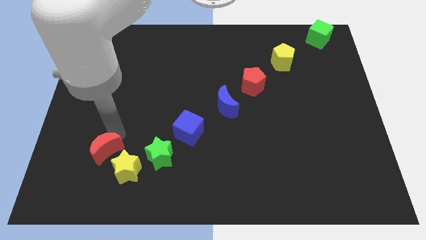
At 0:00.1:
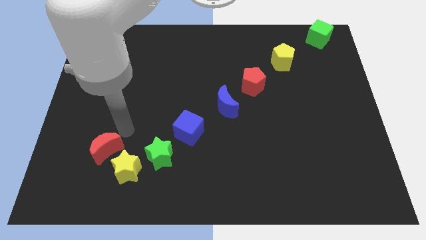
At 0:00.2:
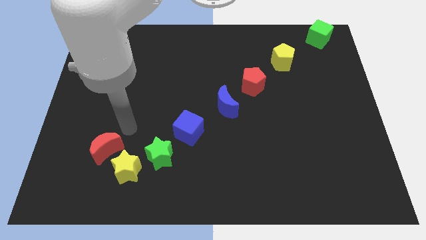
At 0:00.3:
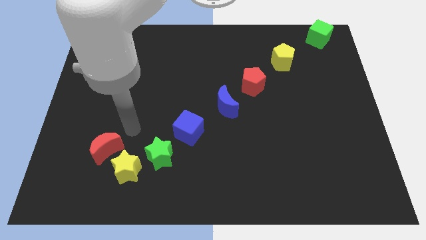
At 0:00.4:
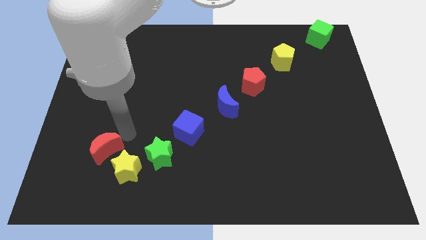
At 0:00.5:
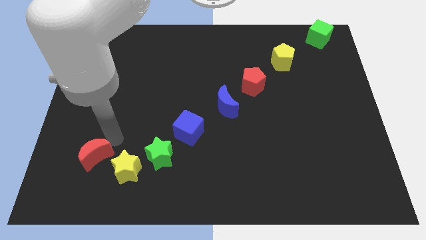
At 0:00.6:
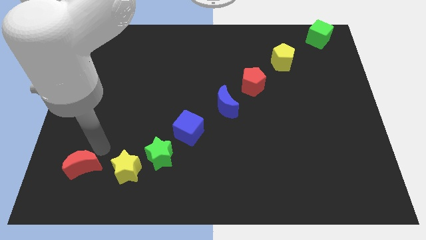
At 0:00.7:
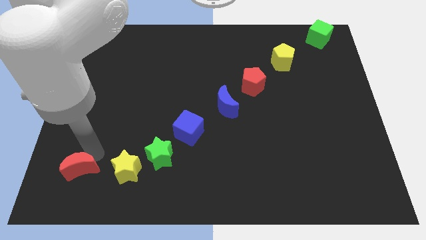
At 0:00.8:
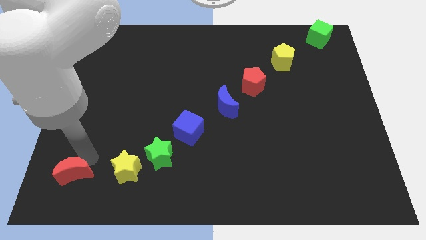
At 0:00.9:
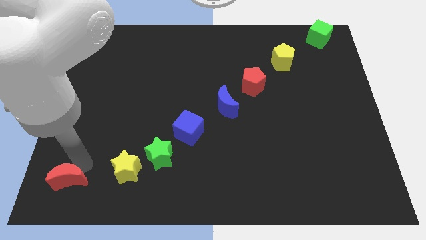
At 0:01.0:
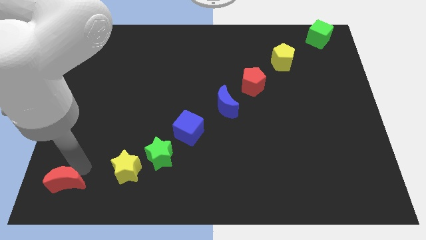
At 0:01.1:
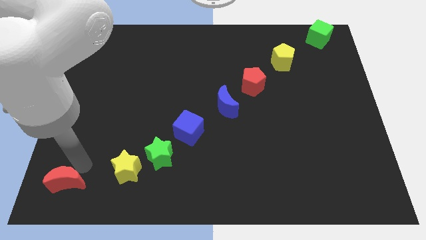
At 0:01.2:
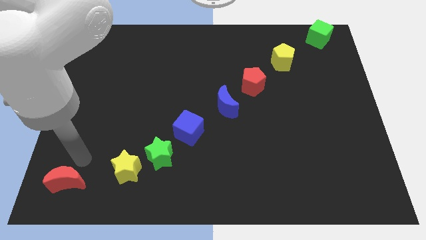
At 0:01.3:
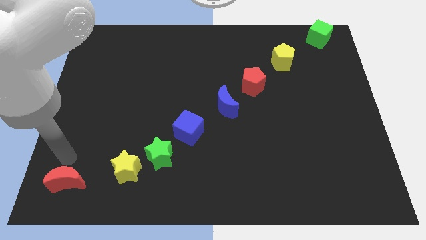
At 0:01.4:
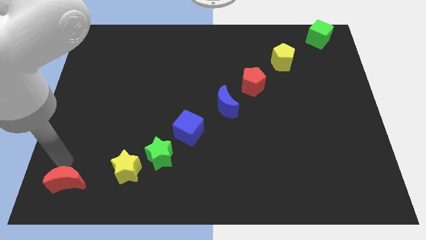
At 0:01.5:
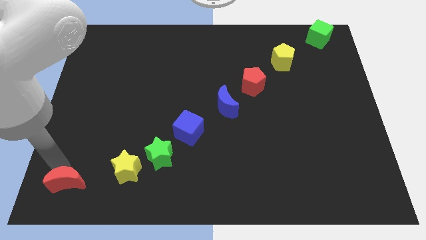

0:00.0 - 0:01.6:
push red crescent downwards

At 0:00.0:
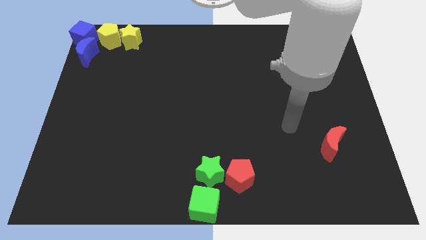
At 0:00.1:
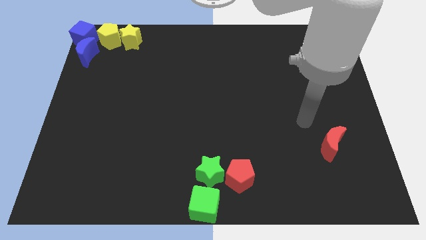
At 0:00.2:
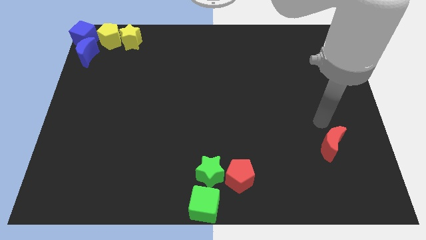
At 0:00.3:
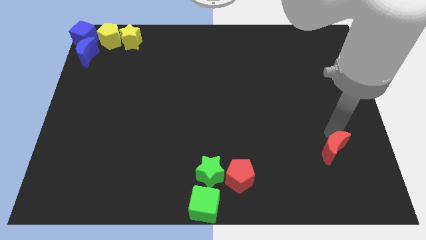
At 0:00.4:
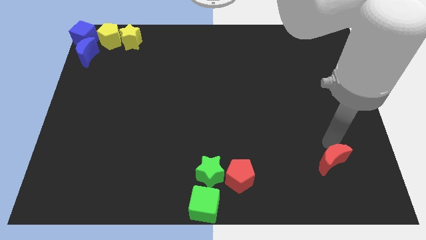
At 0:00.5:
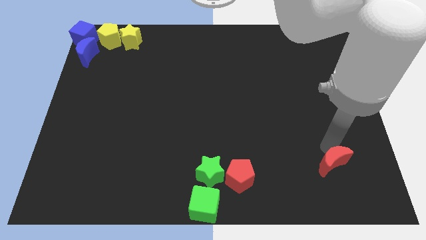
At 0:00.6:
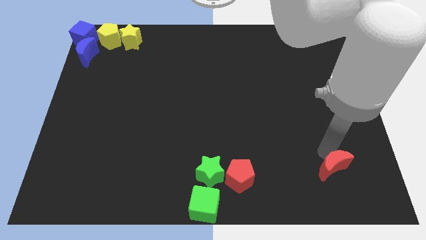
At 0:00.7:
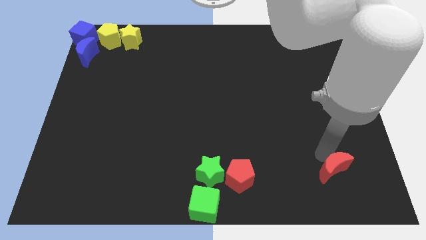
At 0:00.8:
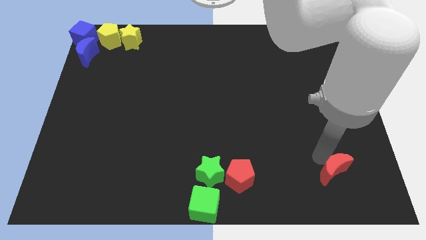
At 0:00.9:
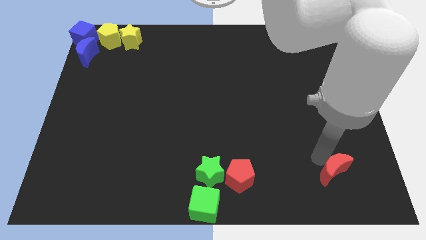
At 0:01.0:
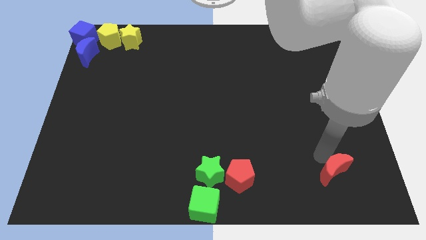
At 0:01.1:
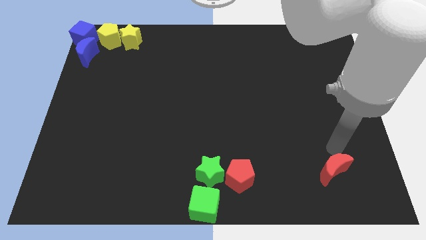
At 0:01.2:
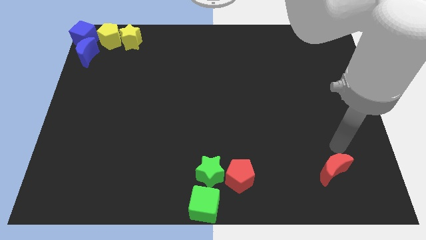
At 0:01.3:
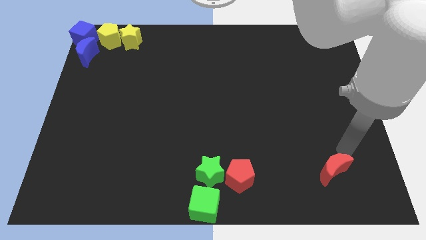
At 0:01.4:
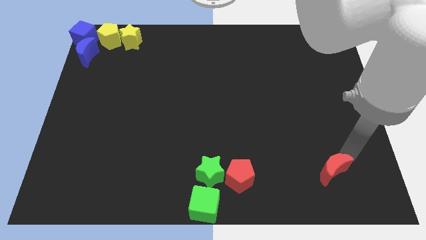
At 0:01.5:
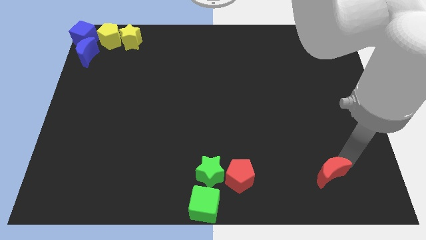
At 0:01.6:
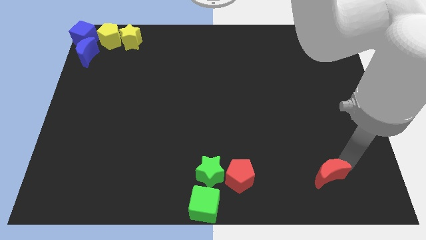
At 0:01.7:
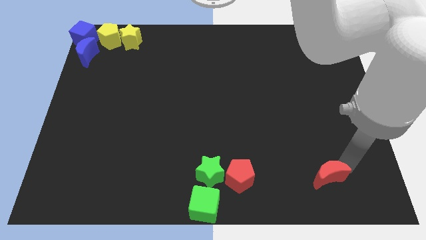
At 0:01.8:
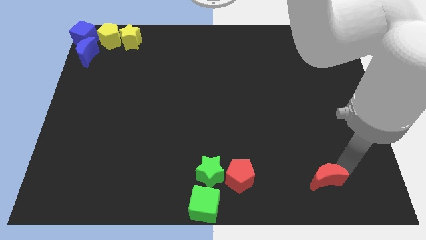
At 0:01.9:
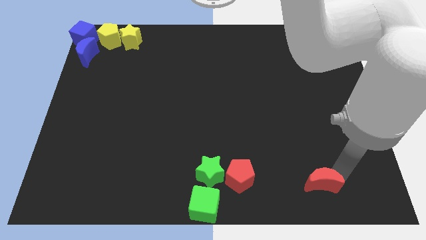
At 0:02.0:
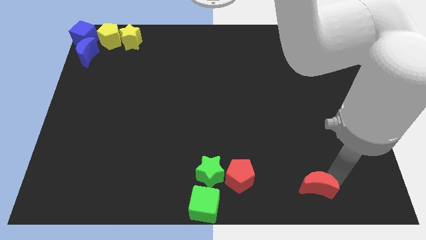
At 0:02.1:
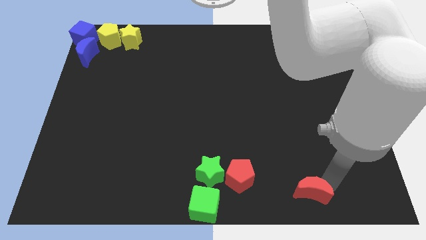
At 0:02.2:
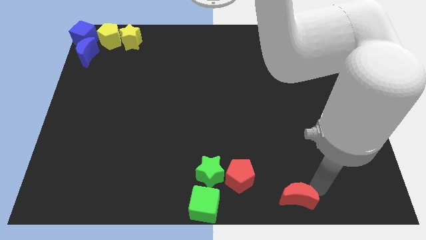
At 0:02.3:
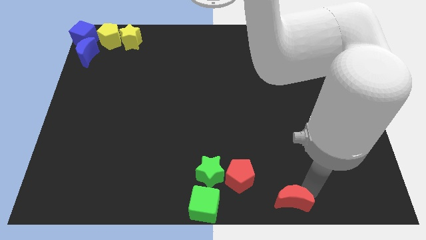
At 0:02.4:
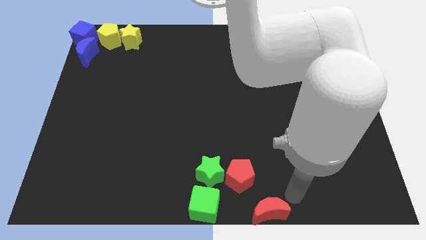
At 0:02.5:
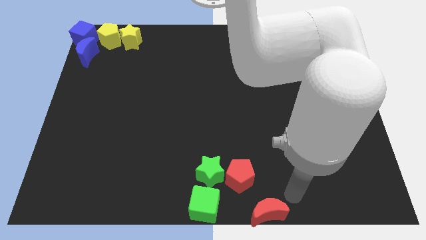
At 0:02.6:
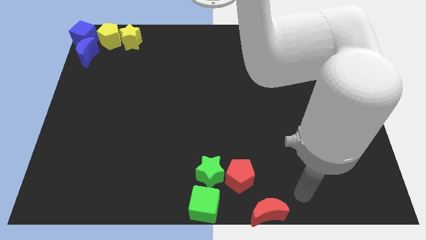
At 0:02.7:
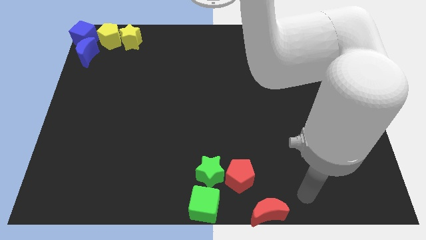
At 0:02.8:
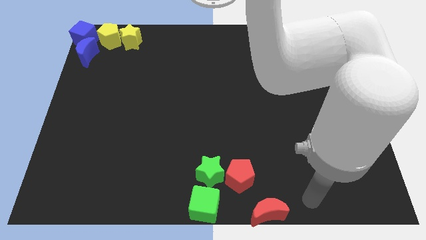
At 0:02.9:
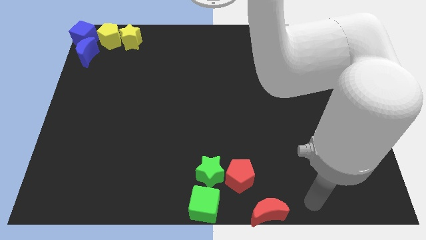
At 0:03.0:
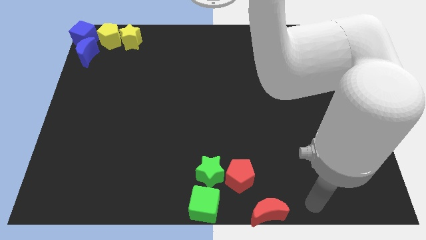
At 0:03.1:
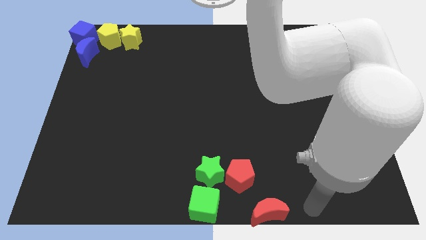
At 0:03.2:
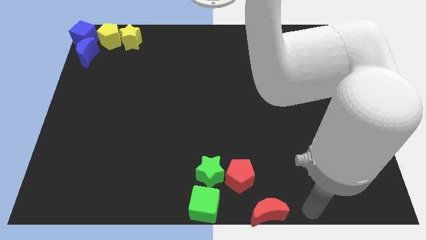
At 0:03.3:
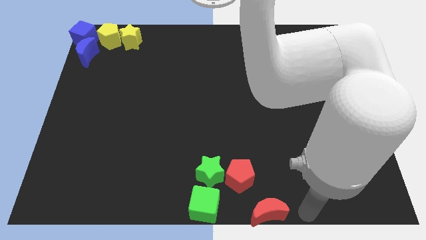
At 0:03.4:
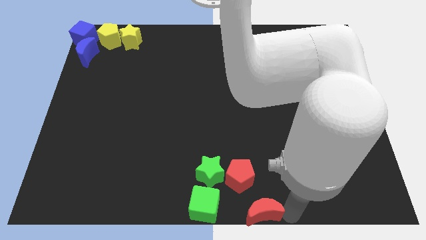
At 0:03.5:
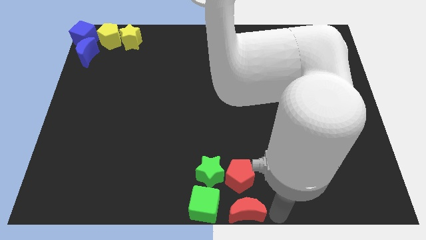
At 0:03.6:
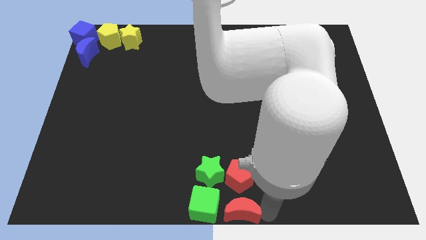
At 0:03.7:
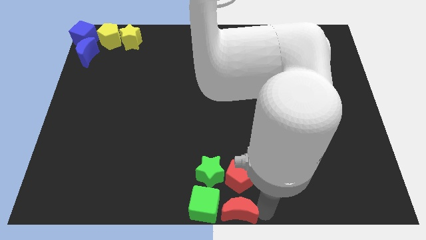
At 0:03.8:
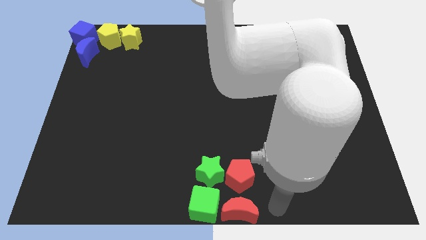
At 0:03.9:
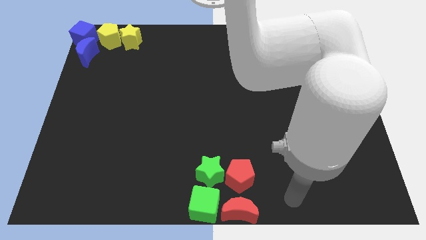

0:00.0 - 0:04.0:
place the red moon below the red pentagon

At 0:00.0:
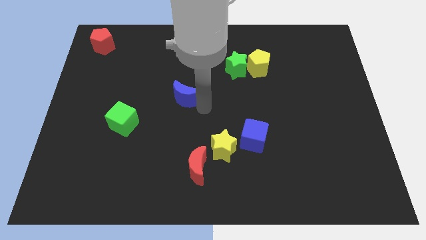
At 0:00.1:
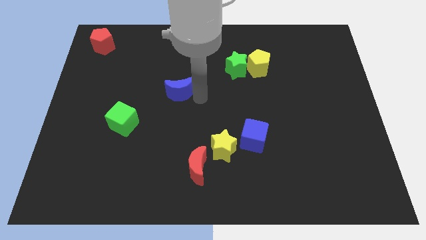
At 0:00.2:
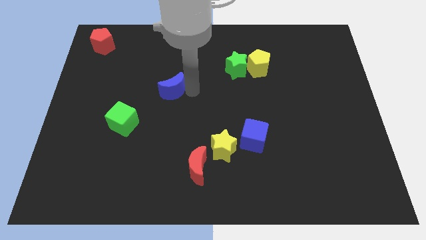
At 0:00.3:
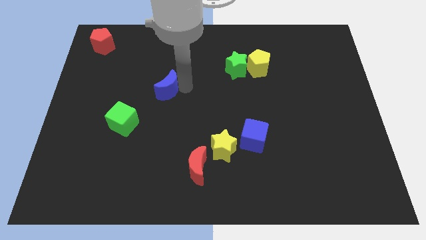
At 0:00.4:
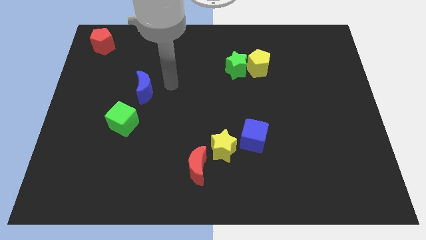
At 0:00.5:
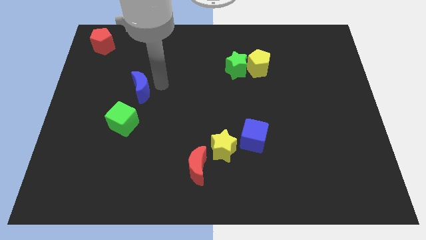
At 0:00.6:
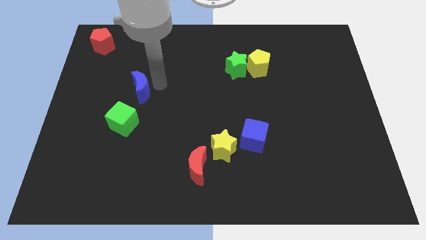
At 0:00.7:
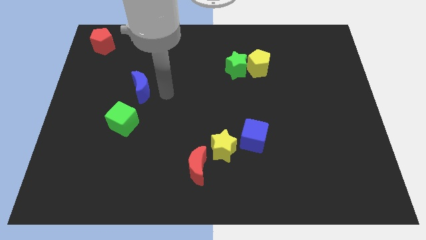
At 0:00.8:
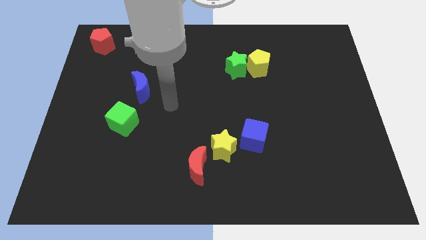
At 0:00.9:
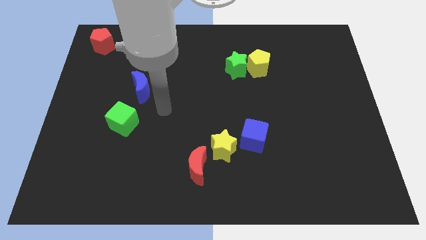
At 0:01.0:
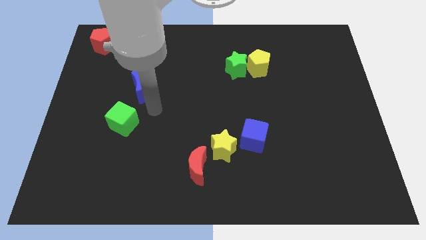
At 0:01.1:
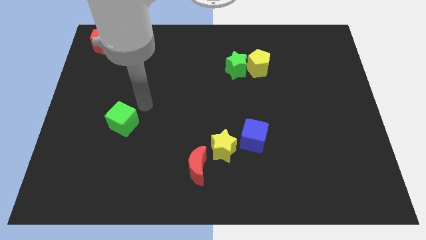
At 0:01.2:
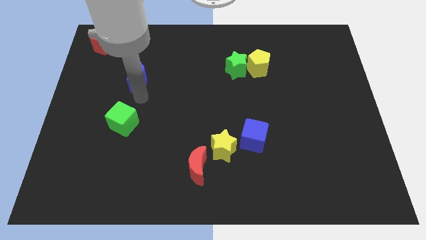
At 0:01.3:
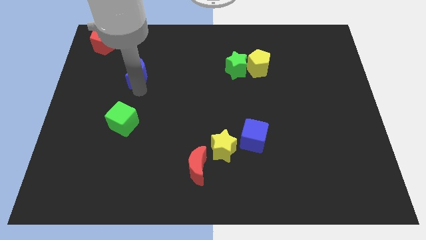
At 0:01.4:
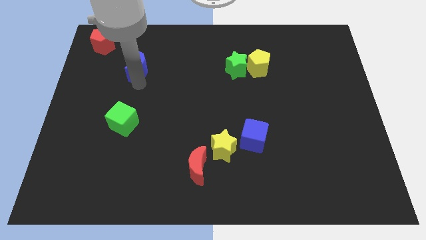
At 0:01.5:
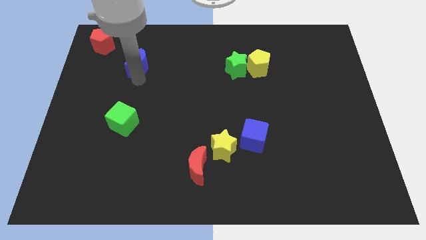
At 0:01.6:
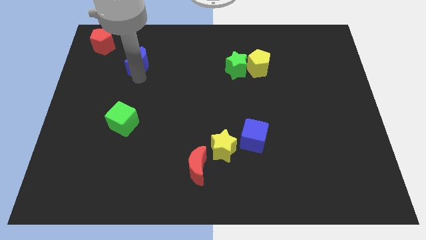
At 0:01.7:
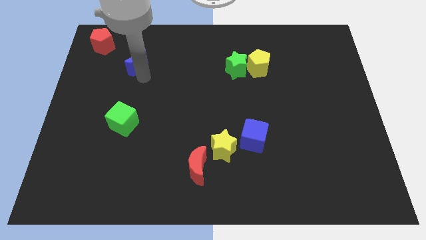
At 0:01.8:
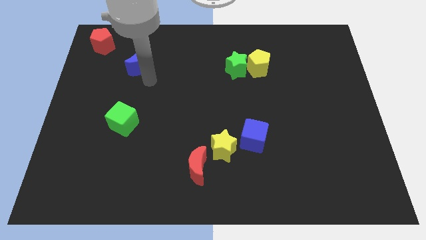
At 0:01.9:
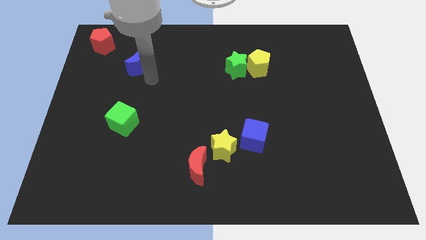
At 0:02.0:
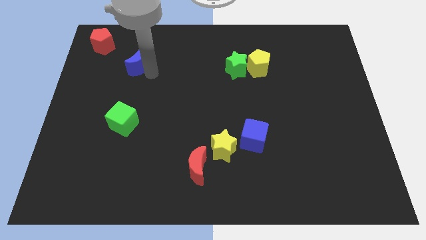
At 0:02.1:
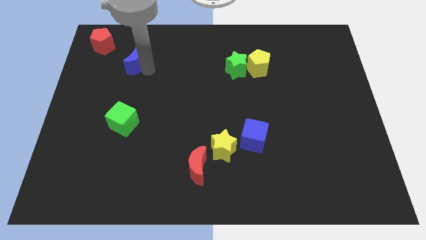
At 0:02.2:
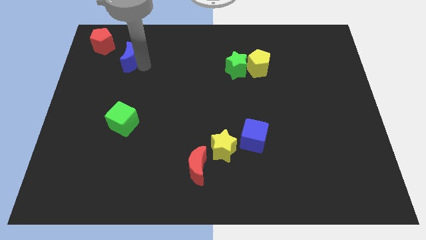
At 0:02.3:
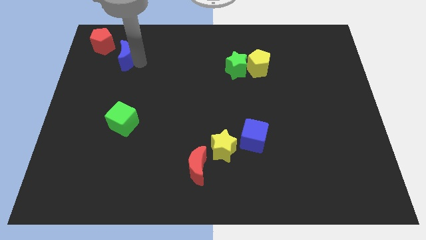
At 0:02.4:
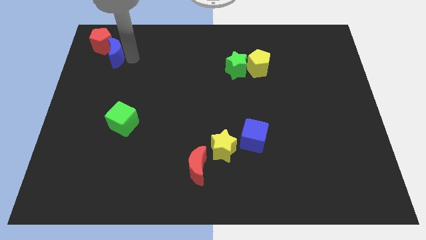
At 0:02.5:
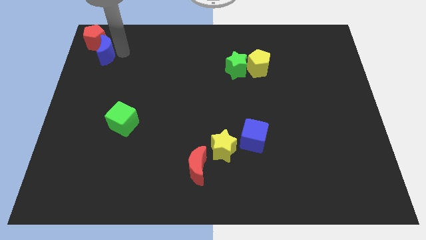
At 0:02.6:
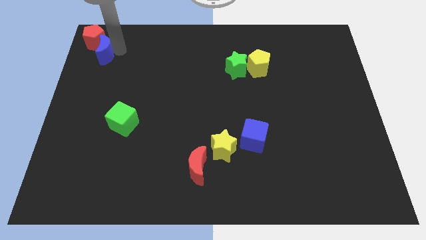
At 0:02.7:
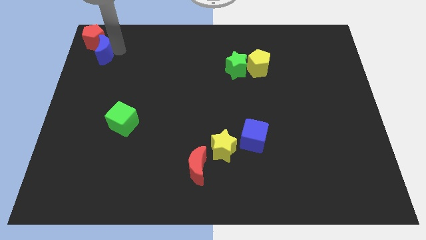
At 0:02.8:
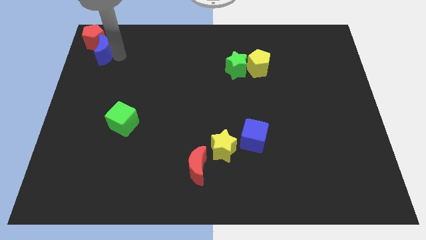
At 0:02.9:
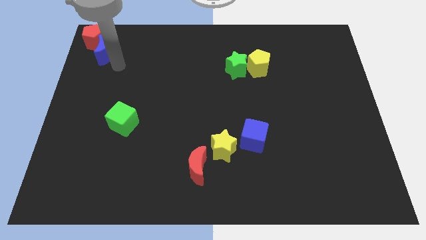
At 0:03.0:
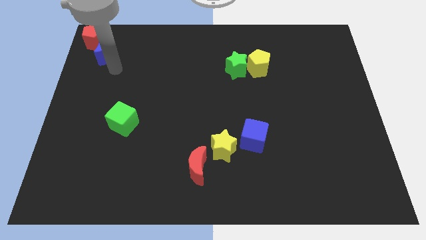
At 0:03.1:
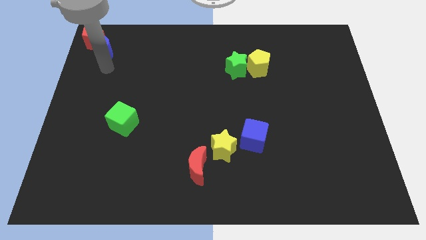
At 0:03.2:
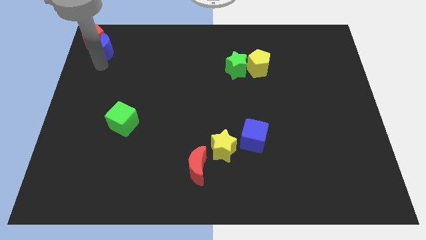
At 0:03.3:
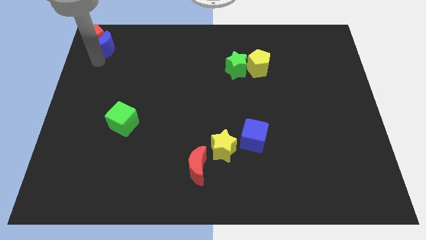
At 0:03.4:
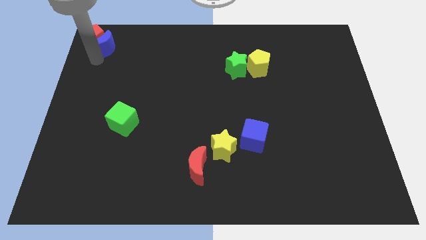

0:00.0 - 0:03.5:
move the blue moon into the red pentagon at the top left
